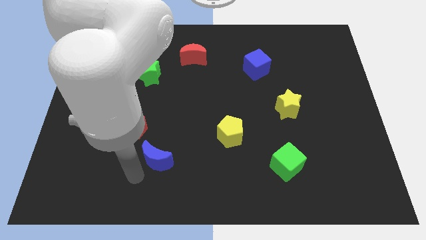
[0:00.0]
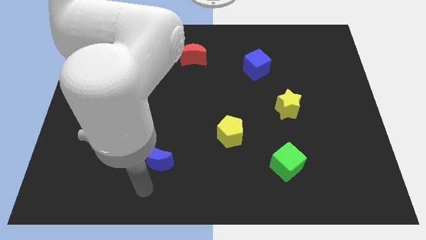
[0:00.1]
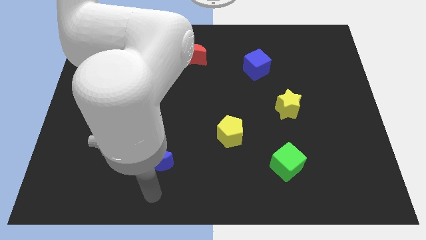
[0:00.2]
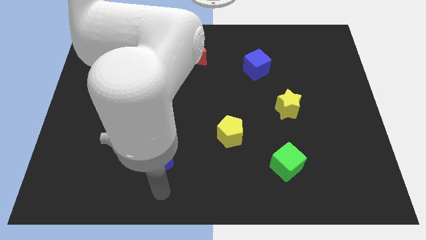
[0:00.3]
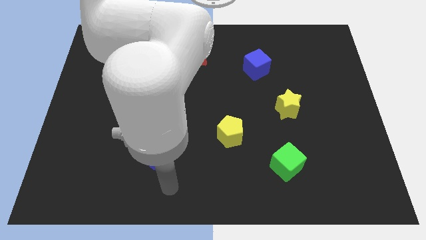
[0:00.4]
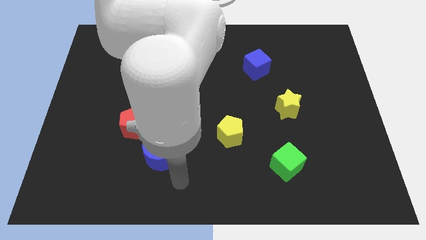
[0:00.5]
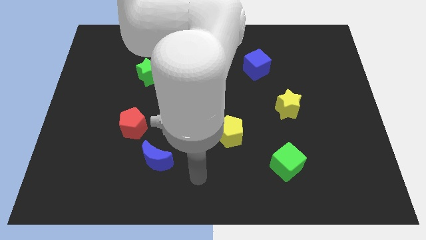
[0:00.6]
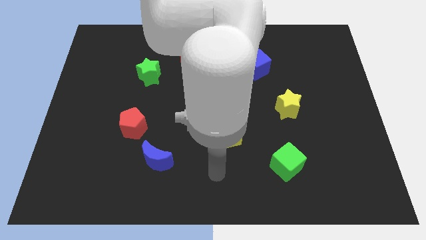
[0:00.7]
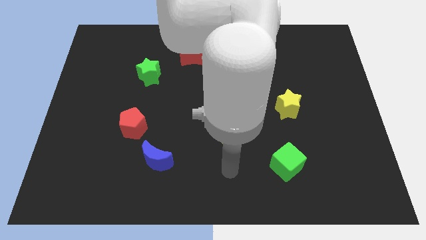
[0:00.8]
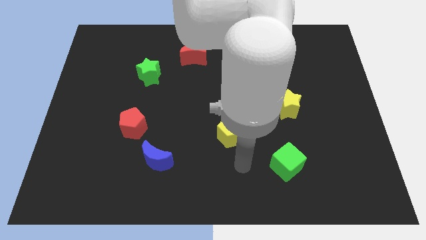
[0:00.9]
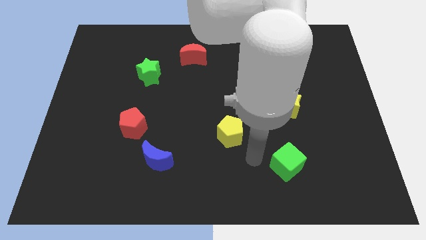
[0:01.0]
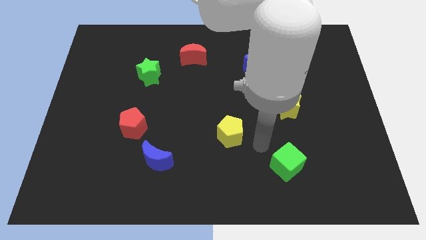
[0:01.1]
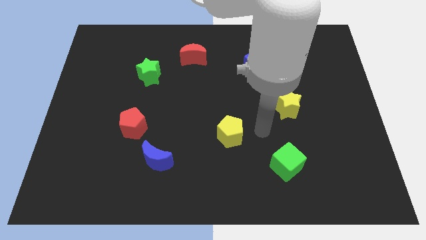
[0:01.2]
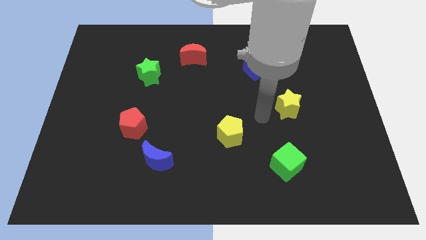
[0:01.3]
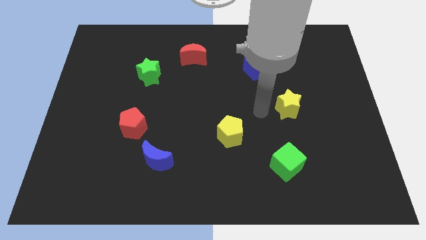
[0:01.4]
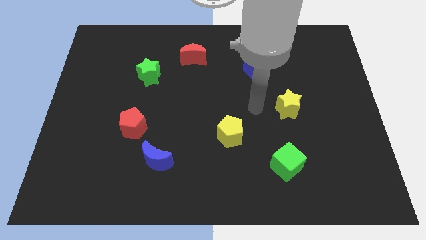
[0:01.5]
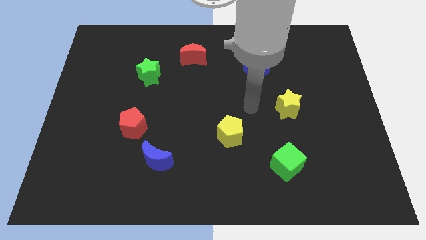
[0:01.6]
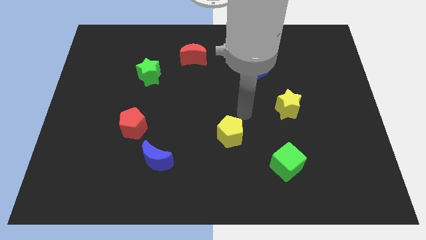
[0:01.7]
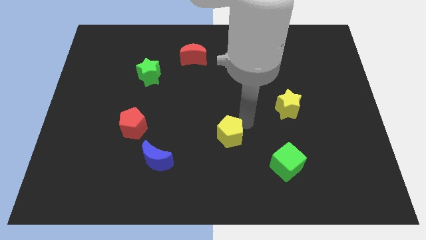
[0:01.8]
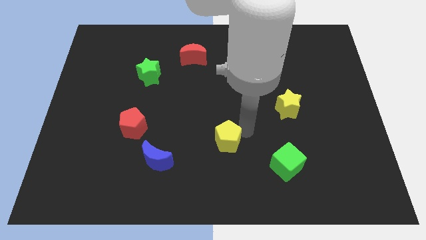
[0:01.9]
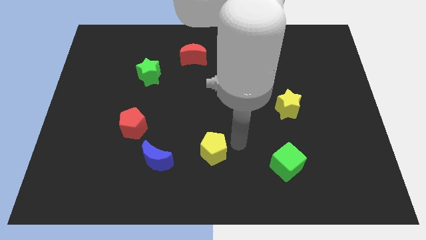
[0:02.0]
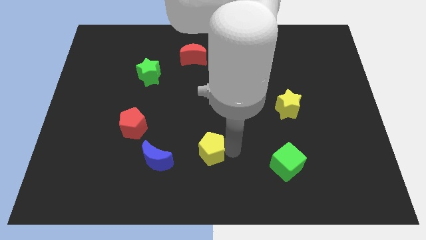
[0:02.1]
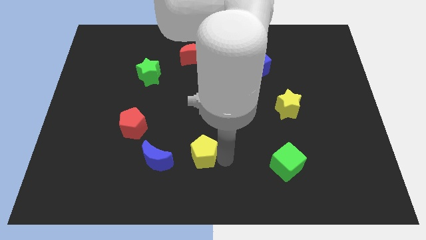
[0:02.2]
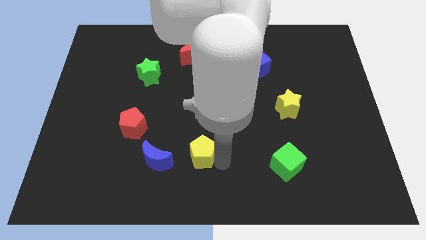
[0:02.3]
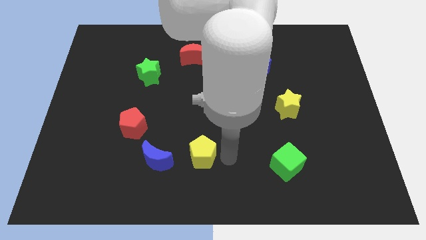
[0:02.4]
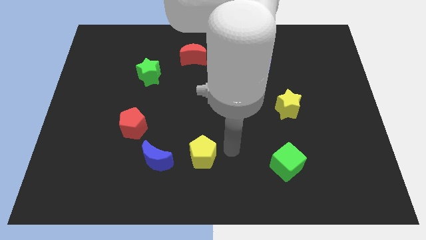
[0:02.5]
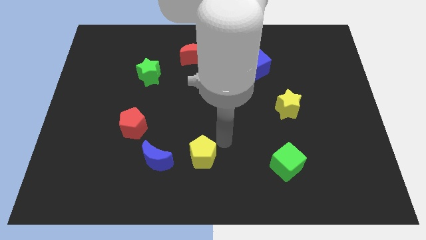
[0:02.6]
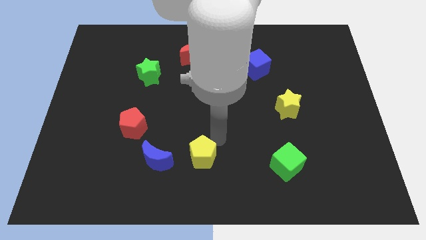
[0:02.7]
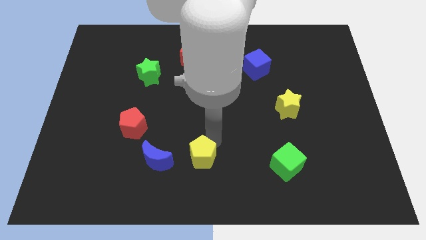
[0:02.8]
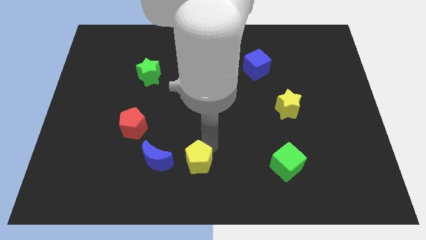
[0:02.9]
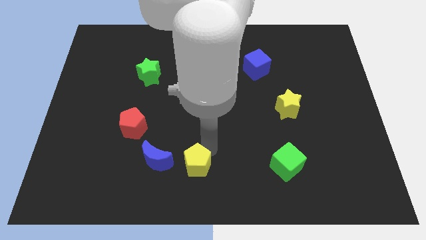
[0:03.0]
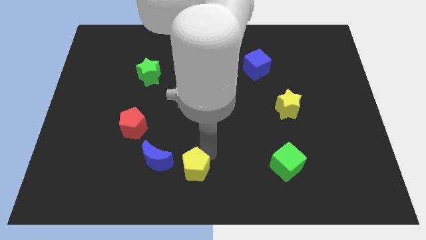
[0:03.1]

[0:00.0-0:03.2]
move the yellow pentagon parallel right to the blue moon

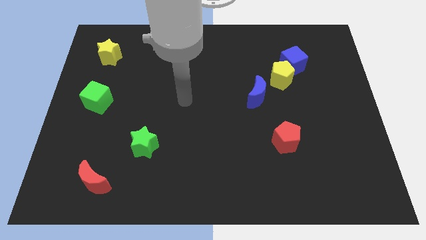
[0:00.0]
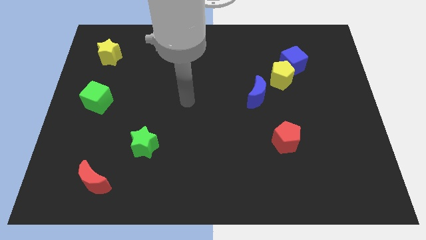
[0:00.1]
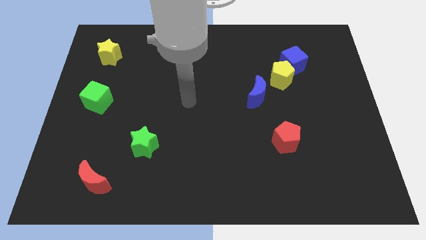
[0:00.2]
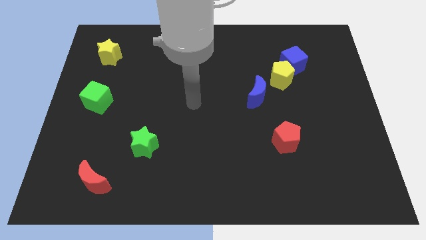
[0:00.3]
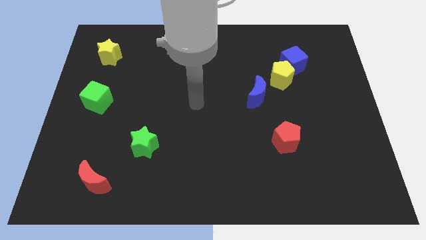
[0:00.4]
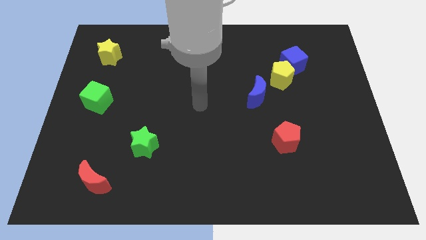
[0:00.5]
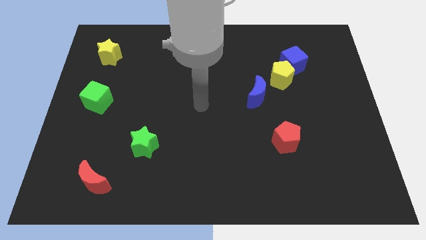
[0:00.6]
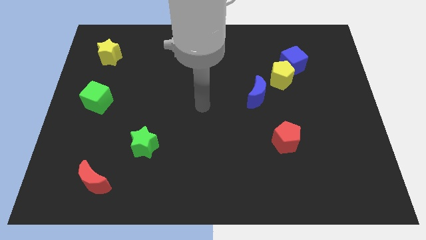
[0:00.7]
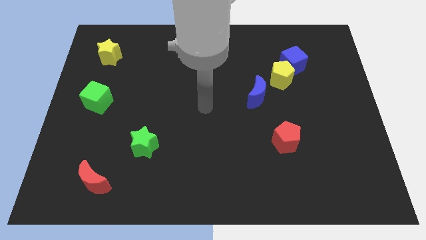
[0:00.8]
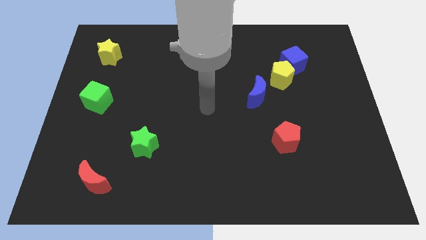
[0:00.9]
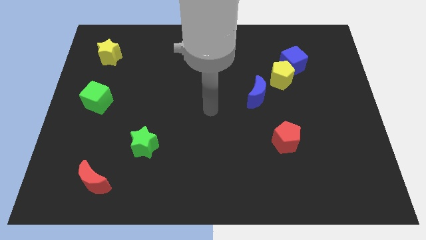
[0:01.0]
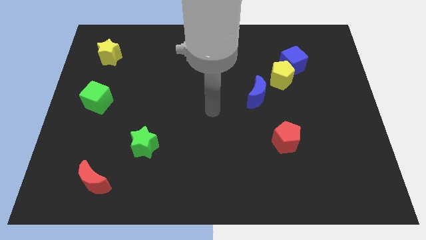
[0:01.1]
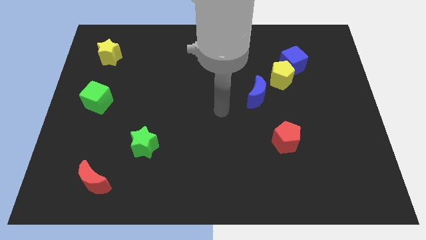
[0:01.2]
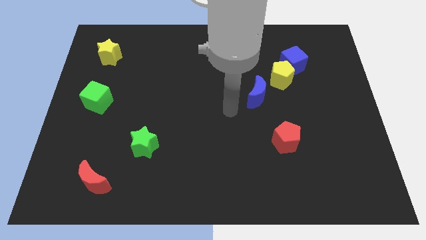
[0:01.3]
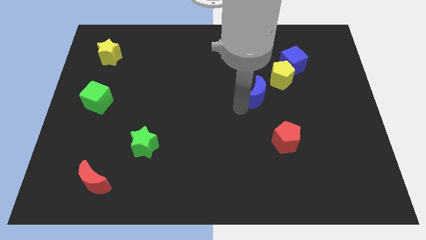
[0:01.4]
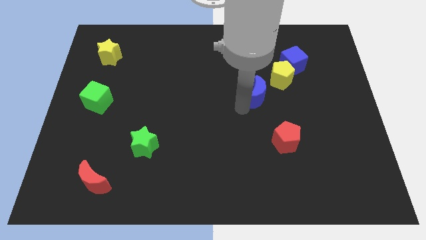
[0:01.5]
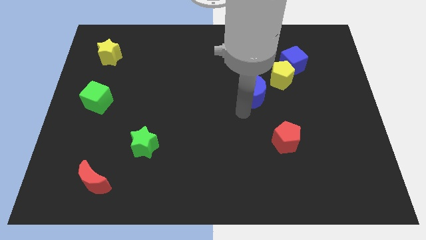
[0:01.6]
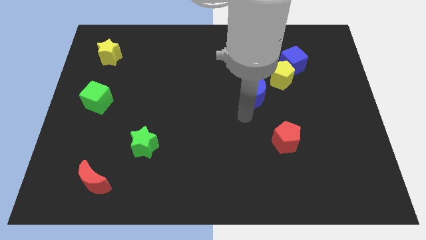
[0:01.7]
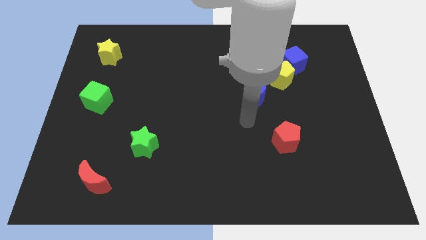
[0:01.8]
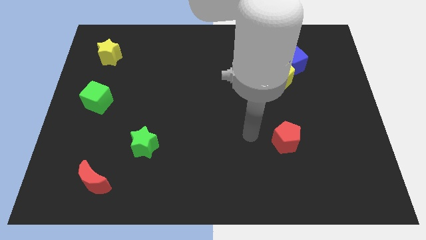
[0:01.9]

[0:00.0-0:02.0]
go and point your hand at the bottom side of the blue crescent

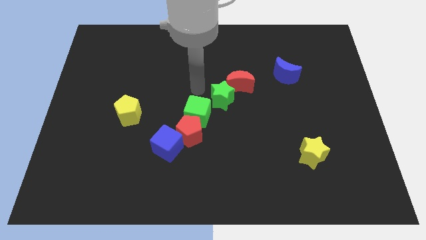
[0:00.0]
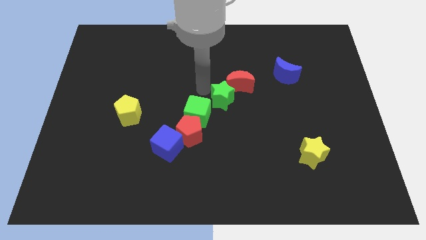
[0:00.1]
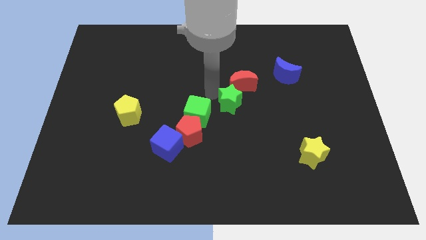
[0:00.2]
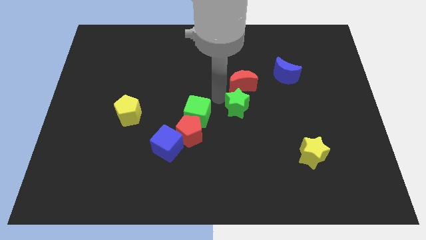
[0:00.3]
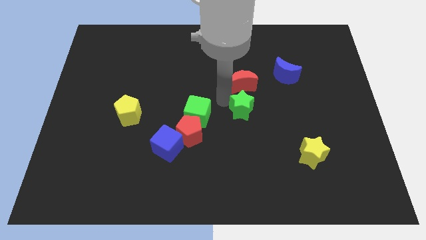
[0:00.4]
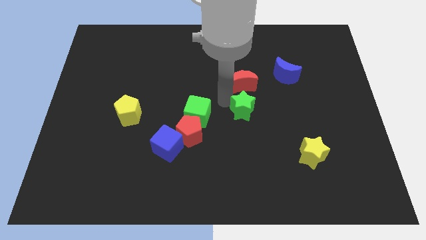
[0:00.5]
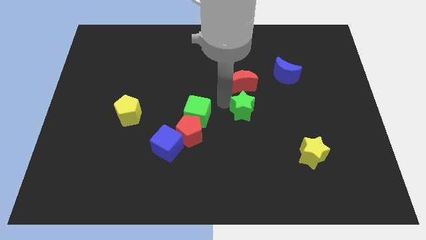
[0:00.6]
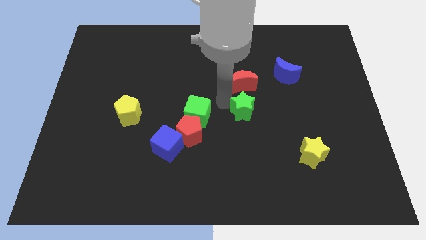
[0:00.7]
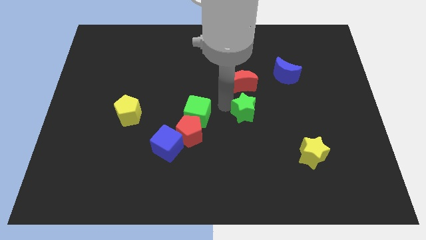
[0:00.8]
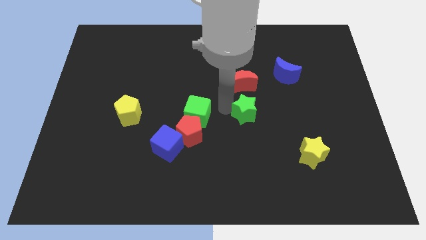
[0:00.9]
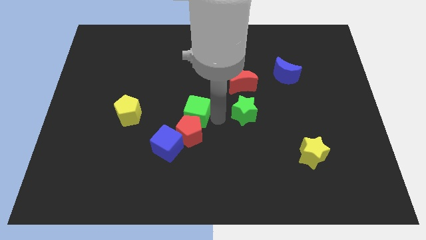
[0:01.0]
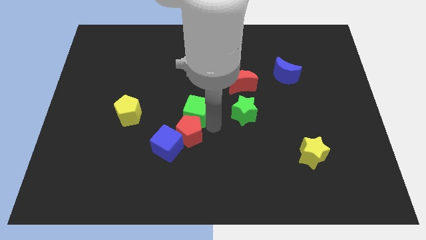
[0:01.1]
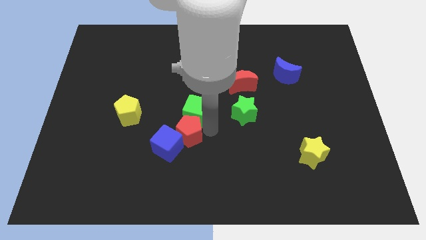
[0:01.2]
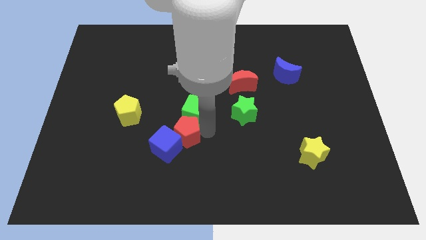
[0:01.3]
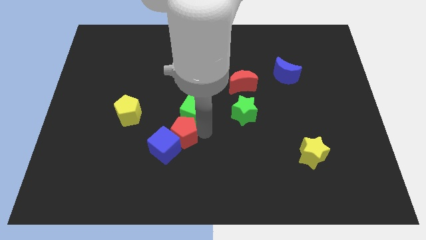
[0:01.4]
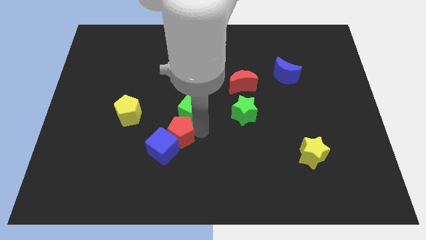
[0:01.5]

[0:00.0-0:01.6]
push the star towards the right center of the board

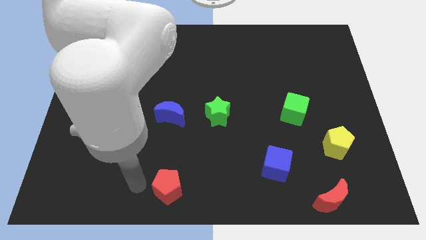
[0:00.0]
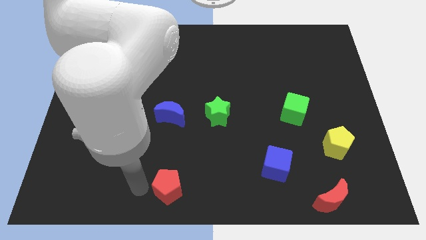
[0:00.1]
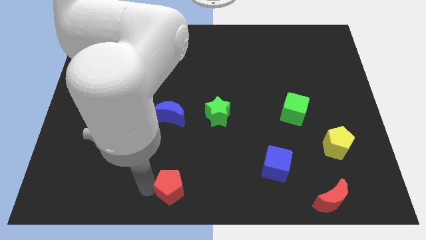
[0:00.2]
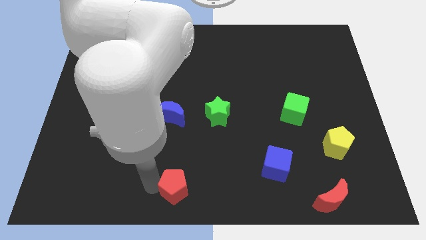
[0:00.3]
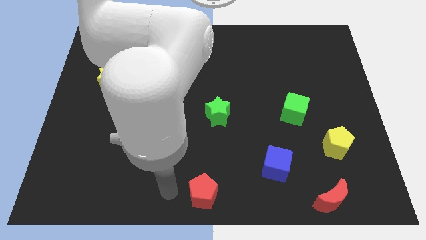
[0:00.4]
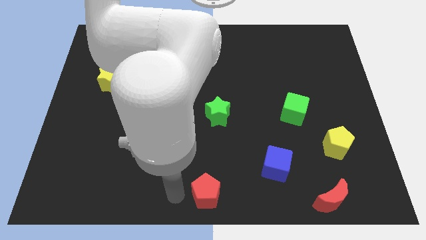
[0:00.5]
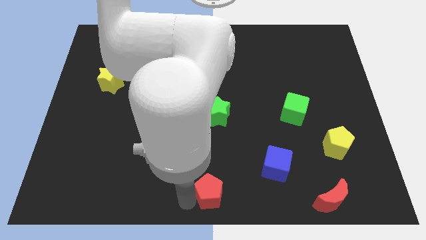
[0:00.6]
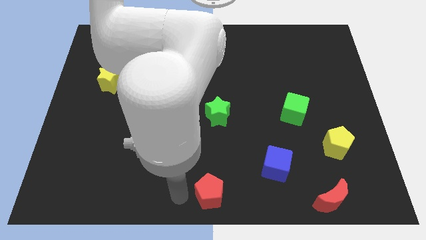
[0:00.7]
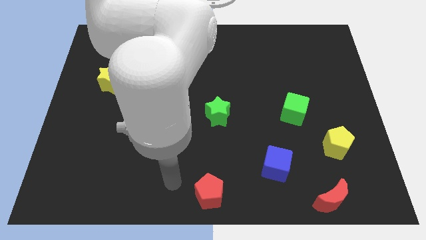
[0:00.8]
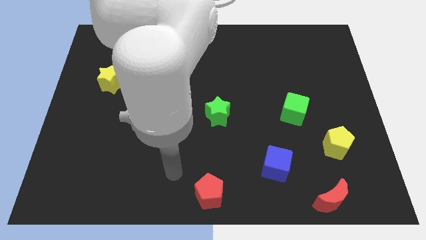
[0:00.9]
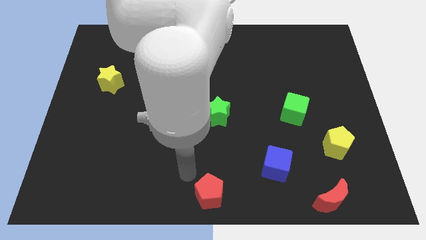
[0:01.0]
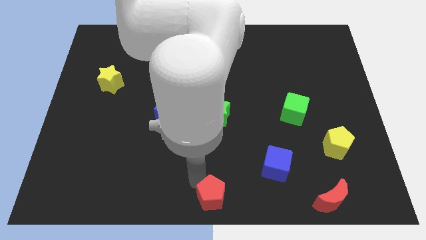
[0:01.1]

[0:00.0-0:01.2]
place red pentagon to the center bottom of the board

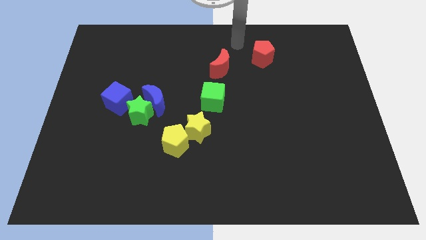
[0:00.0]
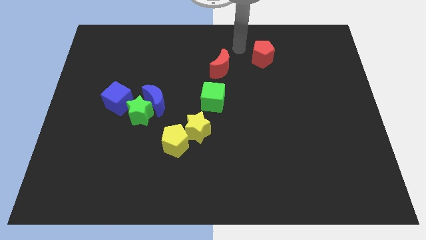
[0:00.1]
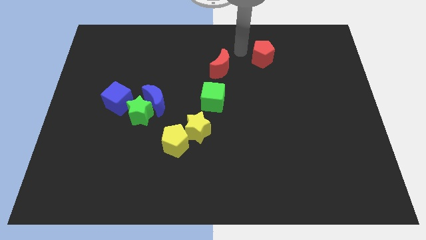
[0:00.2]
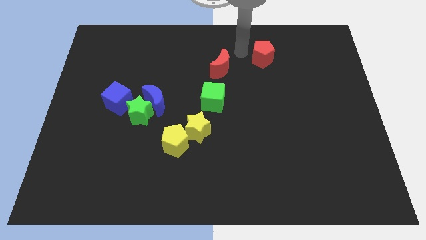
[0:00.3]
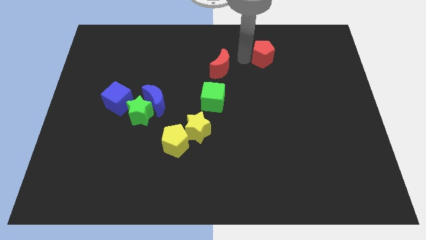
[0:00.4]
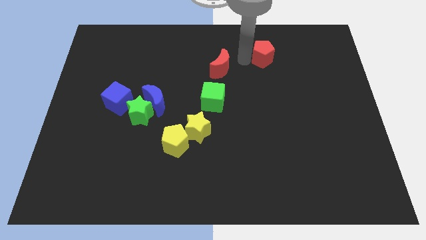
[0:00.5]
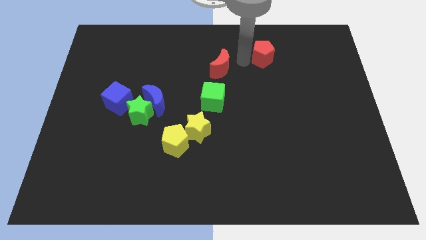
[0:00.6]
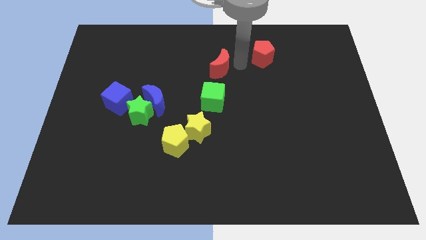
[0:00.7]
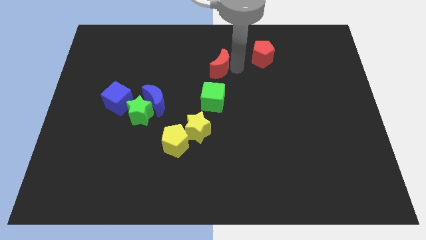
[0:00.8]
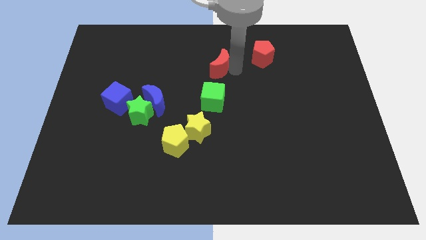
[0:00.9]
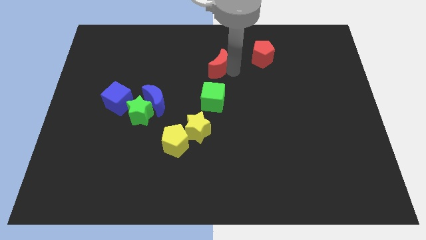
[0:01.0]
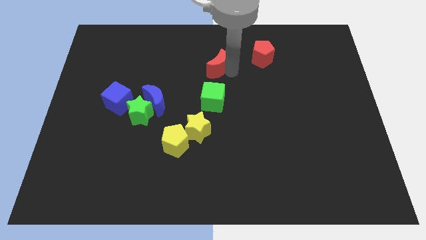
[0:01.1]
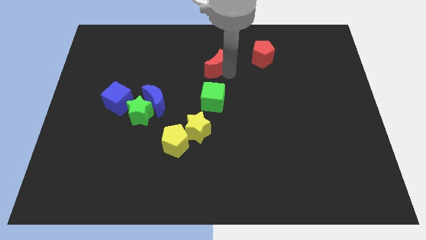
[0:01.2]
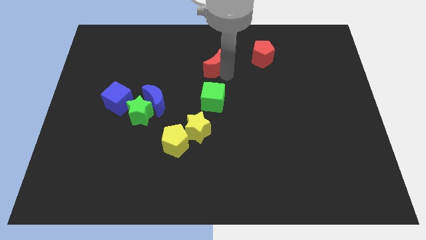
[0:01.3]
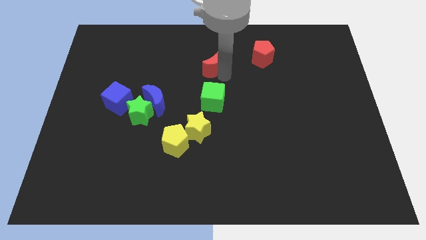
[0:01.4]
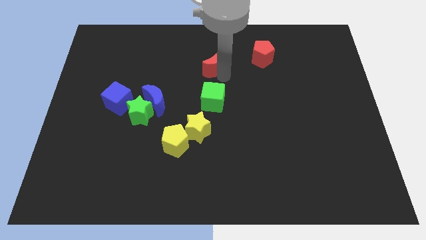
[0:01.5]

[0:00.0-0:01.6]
push the red crescent slightly to the left
